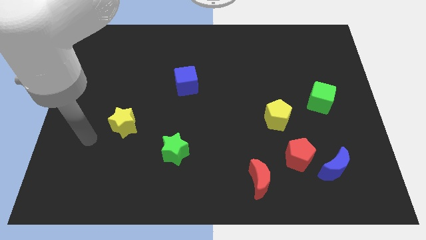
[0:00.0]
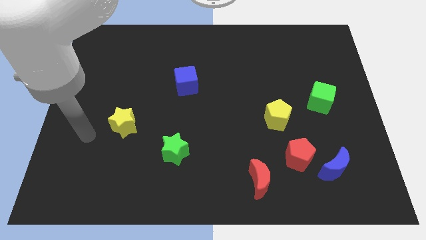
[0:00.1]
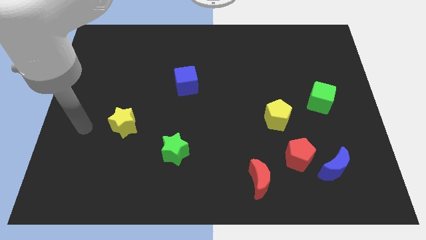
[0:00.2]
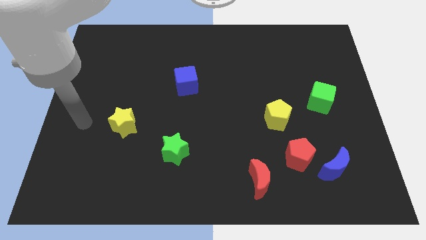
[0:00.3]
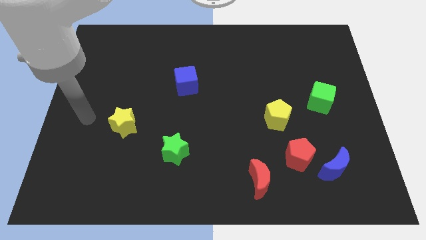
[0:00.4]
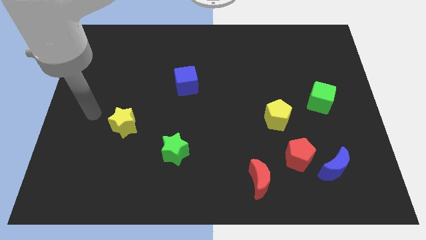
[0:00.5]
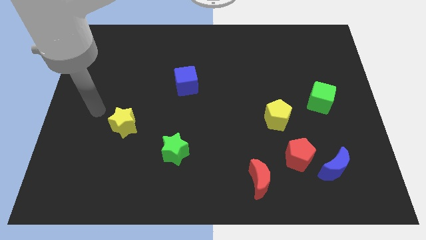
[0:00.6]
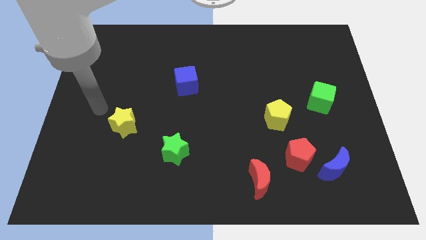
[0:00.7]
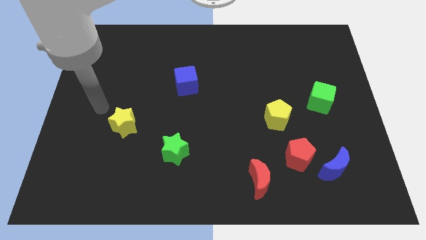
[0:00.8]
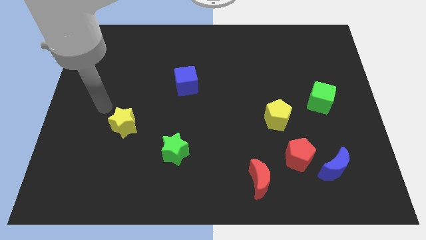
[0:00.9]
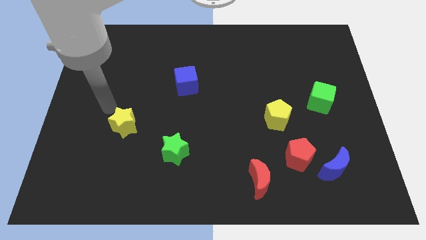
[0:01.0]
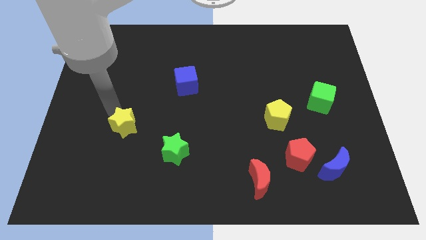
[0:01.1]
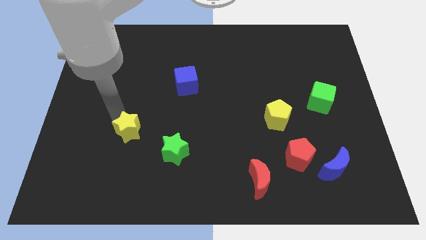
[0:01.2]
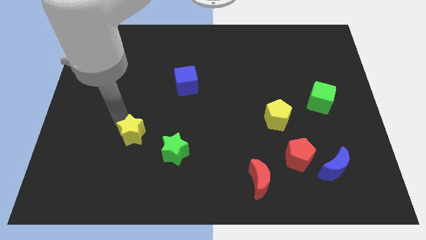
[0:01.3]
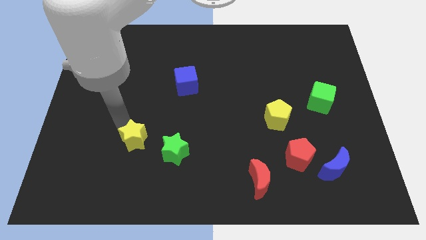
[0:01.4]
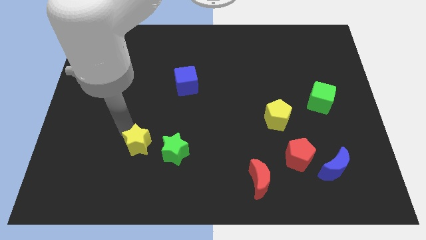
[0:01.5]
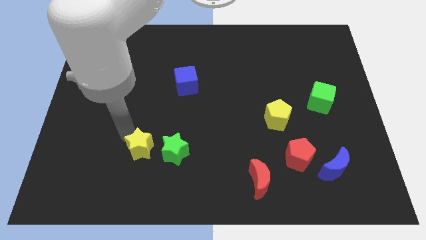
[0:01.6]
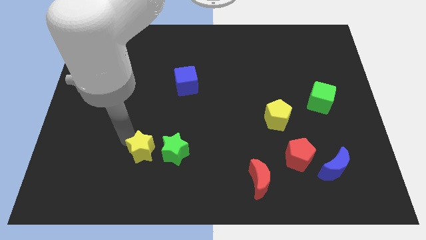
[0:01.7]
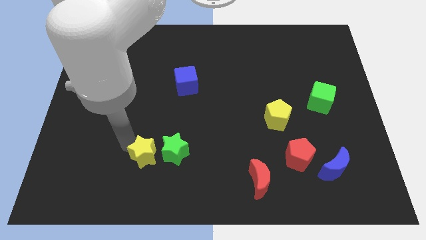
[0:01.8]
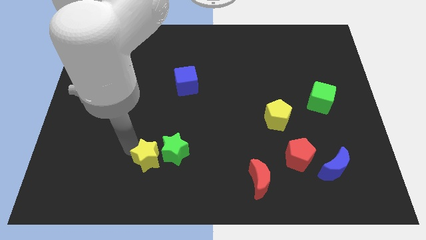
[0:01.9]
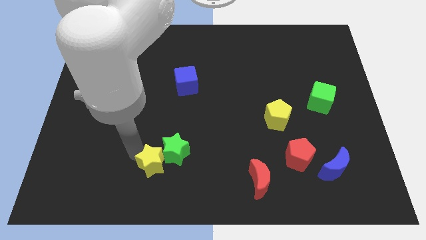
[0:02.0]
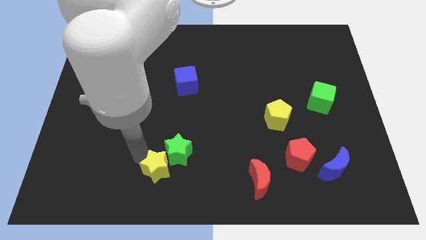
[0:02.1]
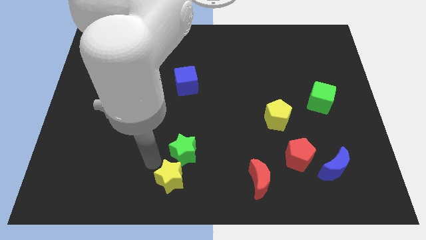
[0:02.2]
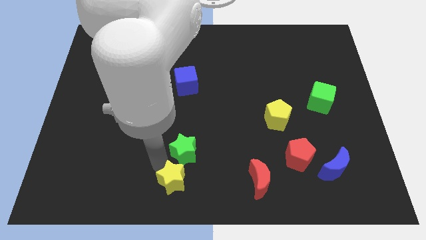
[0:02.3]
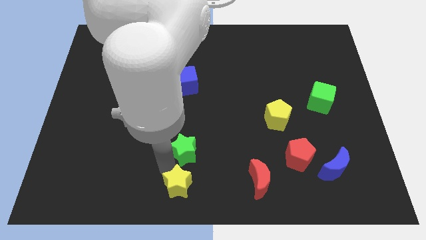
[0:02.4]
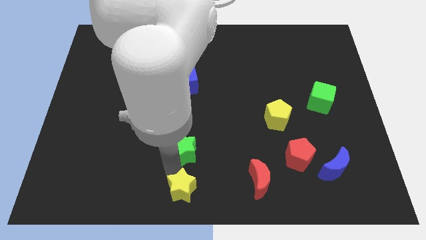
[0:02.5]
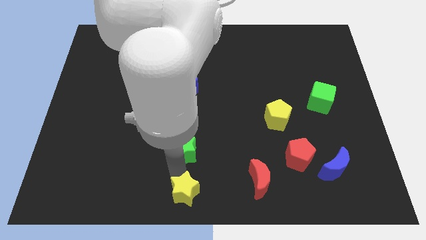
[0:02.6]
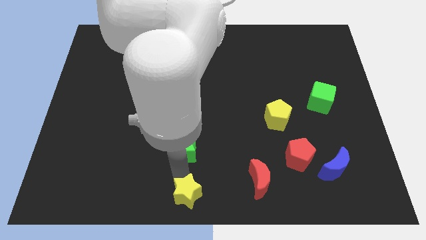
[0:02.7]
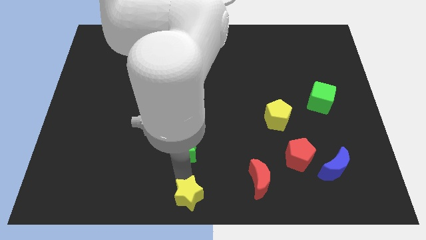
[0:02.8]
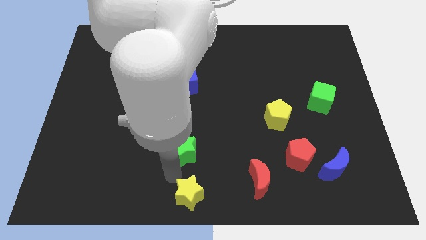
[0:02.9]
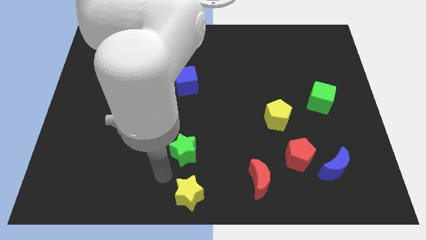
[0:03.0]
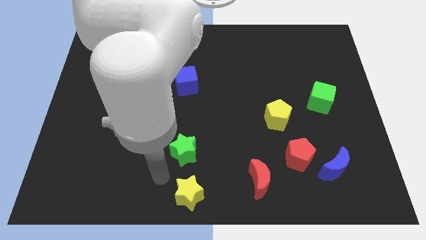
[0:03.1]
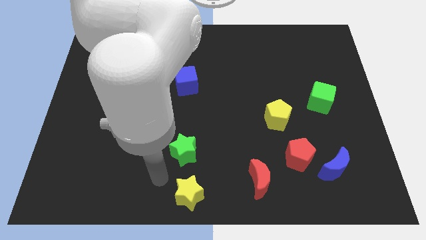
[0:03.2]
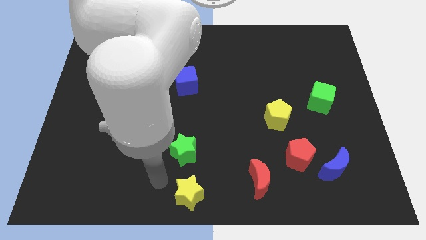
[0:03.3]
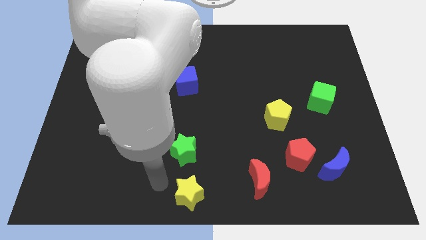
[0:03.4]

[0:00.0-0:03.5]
place the yellow star below the green star

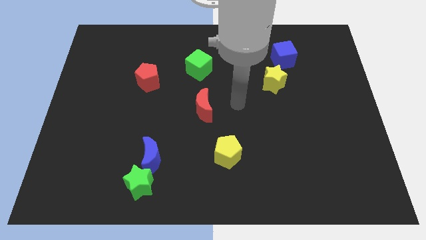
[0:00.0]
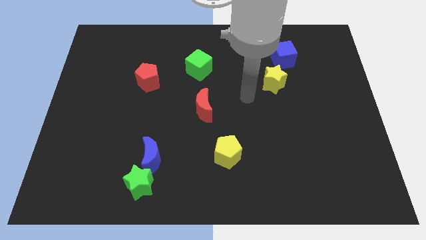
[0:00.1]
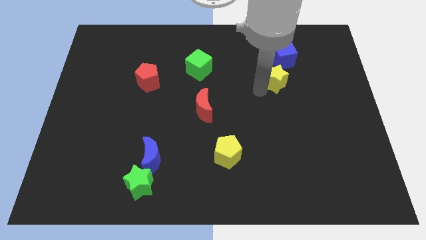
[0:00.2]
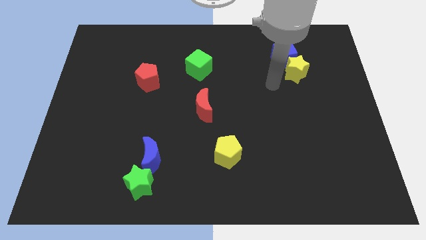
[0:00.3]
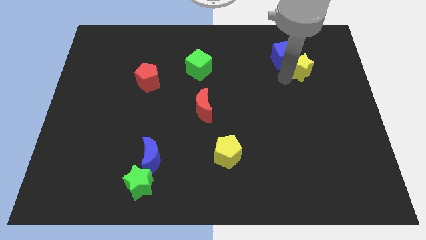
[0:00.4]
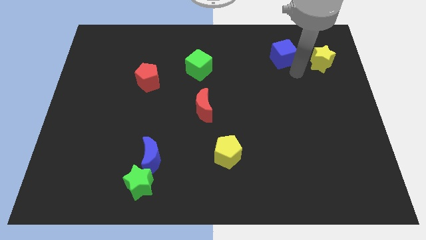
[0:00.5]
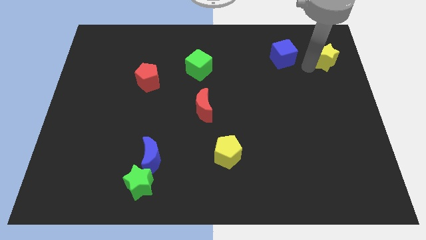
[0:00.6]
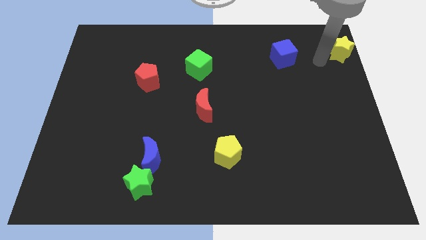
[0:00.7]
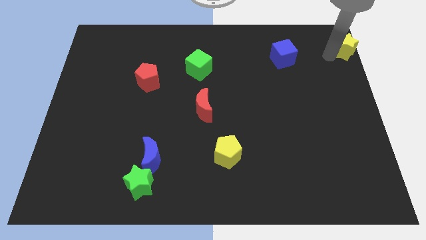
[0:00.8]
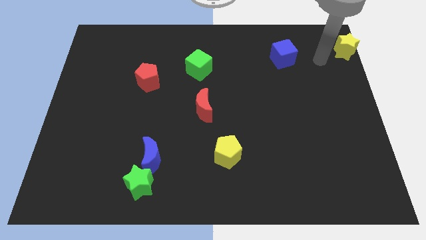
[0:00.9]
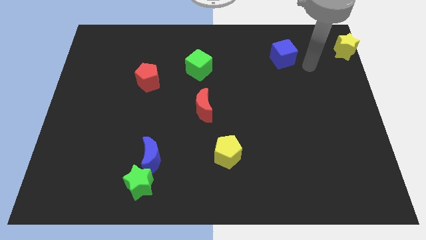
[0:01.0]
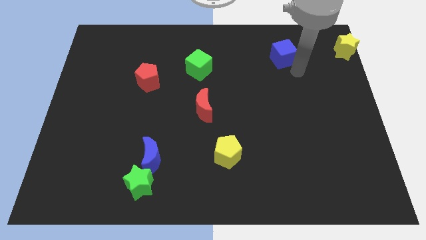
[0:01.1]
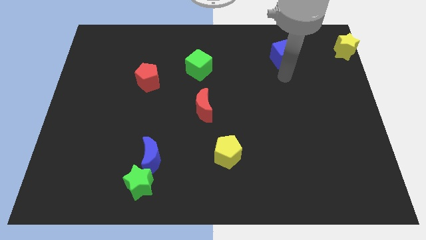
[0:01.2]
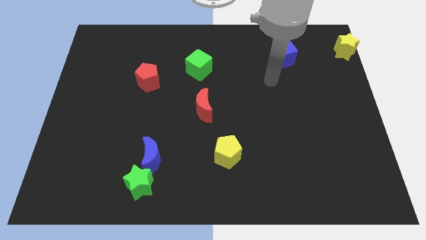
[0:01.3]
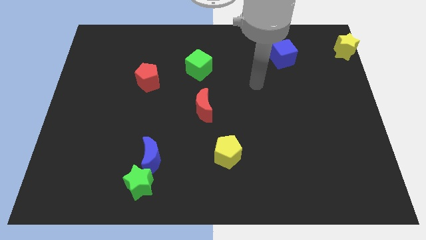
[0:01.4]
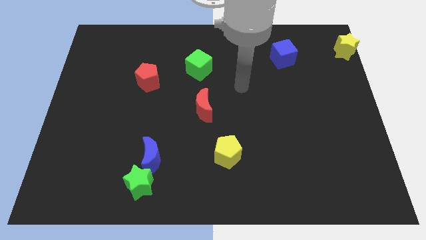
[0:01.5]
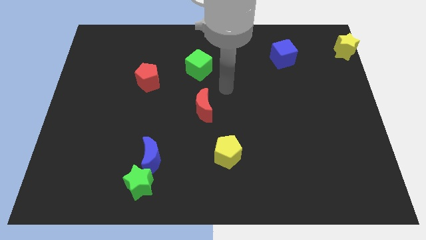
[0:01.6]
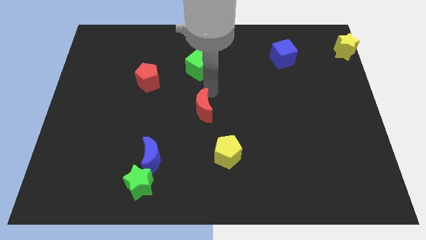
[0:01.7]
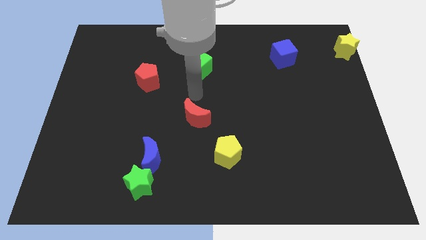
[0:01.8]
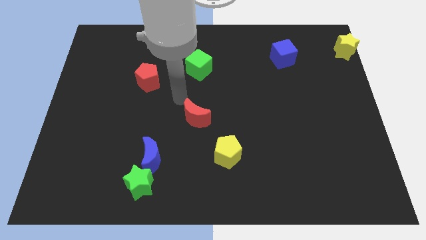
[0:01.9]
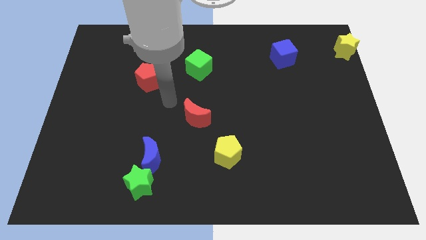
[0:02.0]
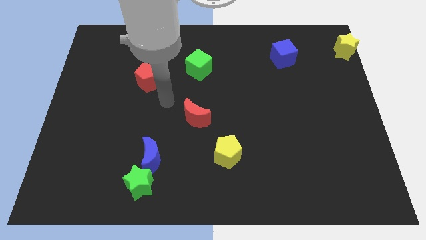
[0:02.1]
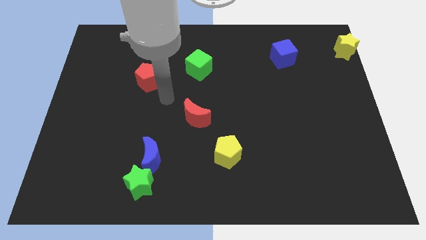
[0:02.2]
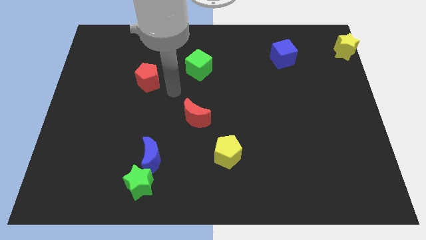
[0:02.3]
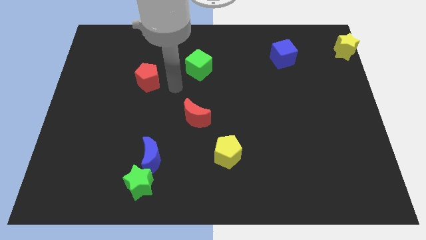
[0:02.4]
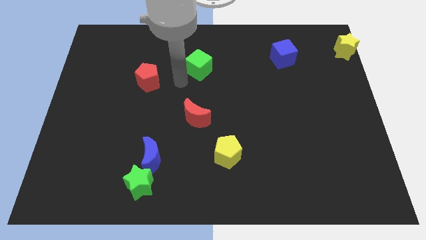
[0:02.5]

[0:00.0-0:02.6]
move the yellow star to the top right of the board

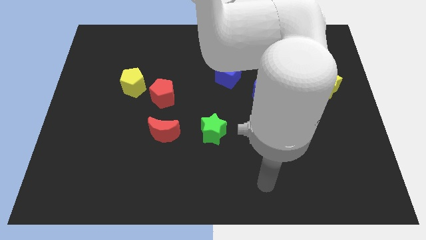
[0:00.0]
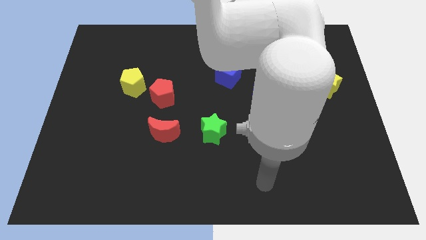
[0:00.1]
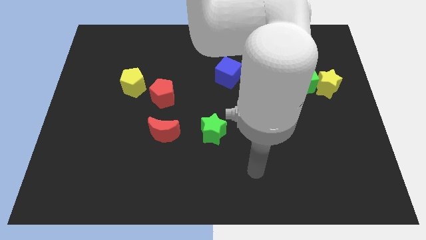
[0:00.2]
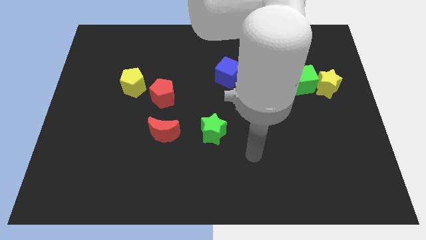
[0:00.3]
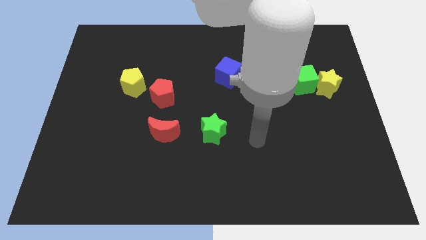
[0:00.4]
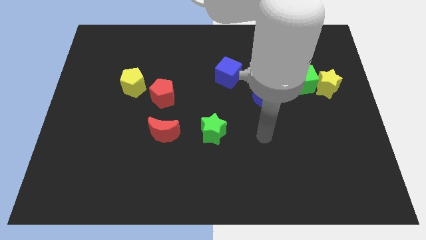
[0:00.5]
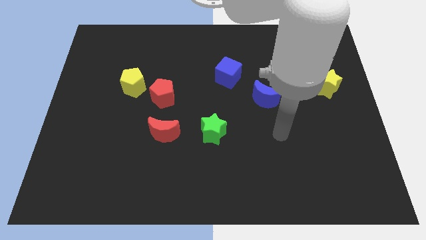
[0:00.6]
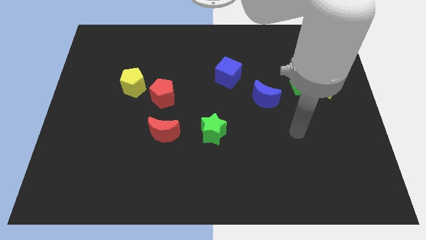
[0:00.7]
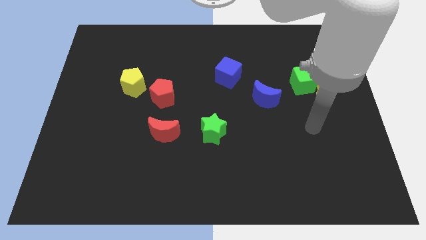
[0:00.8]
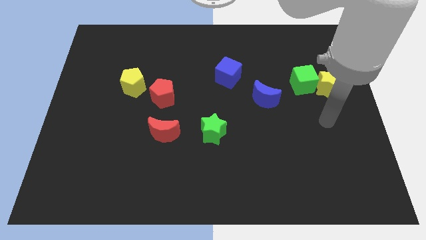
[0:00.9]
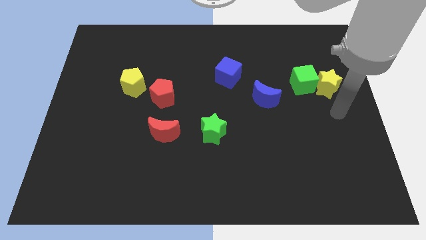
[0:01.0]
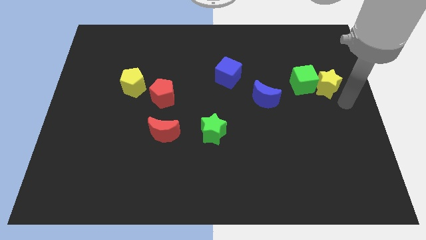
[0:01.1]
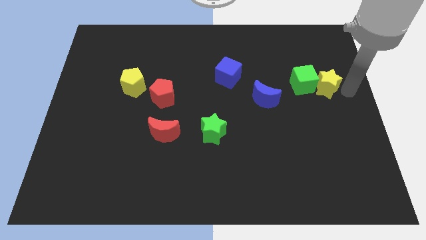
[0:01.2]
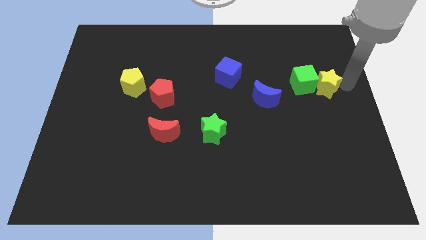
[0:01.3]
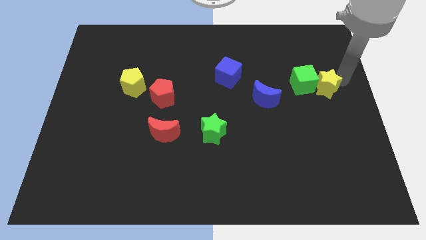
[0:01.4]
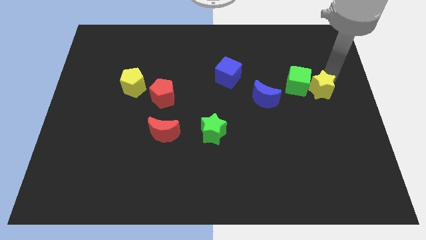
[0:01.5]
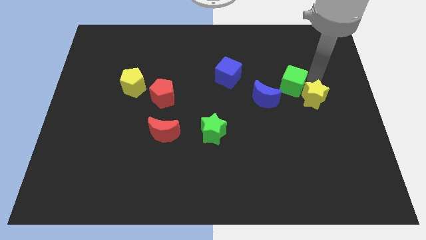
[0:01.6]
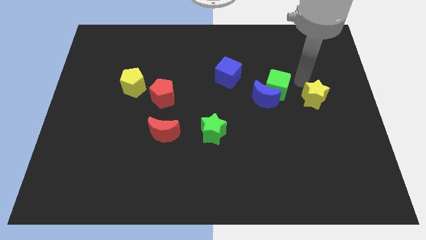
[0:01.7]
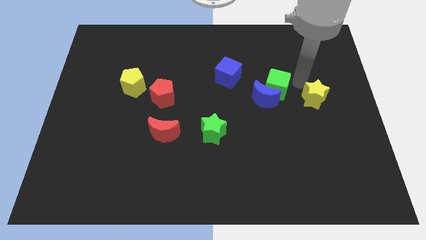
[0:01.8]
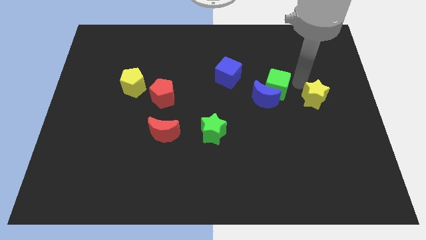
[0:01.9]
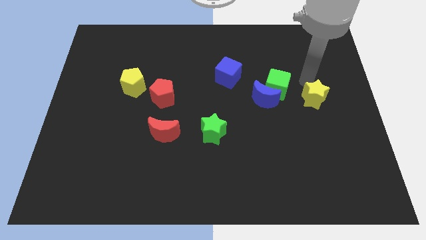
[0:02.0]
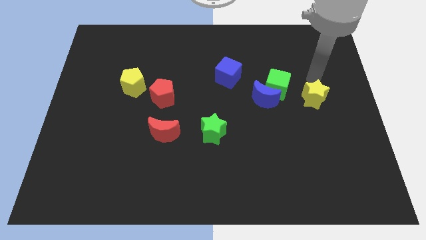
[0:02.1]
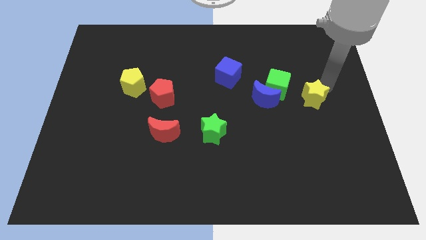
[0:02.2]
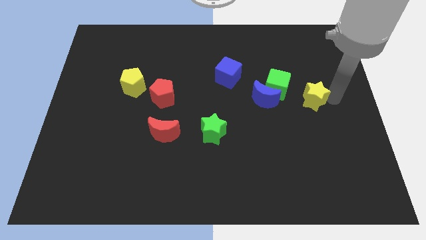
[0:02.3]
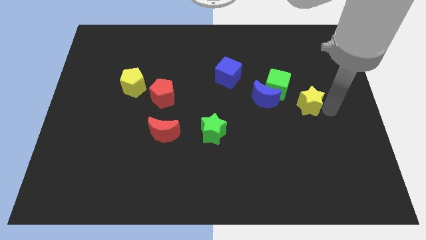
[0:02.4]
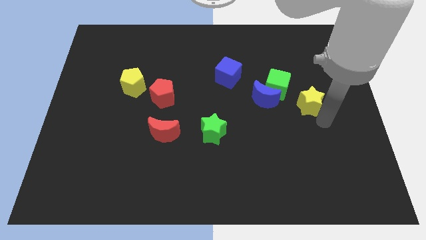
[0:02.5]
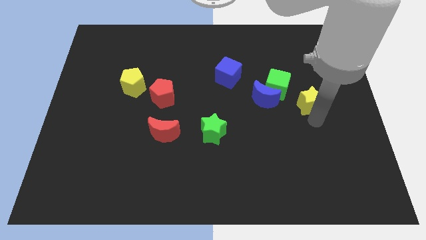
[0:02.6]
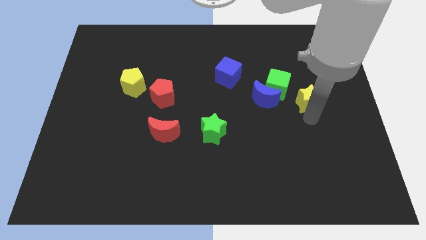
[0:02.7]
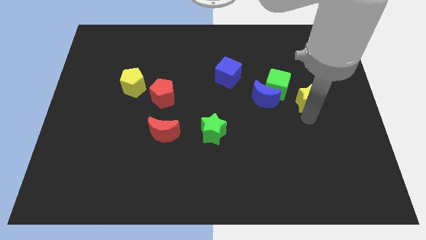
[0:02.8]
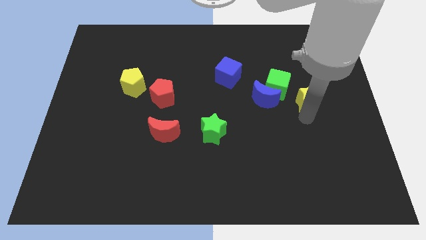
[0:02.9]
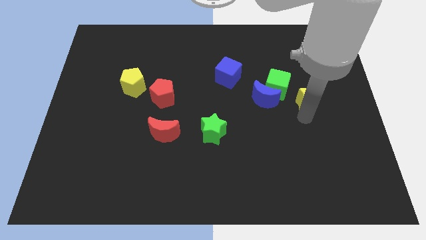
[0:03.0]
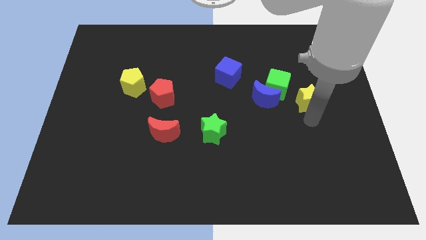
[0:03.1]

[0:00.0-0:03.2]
separate the green cube and the yellow star
